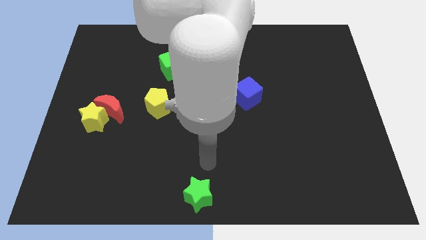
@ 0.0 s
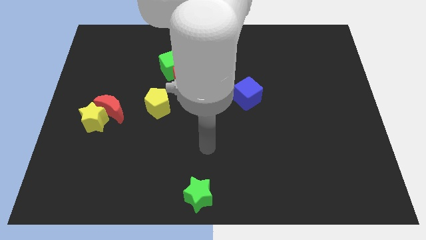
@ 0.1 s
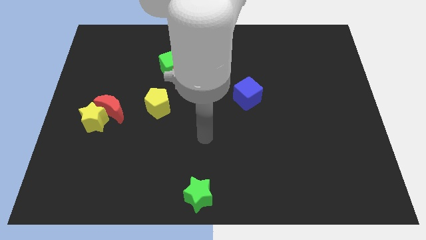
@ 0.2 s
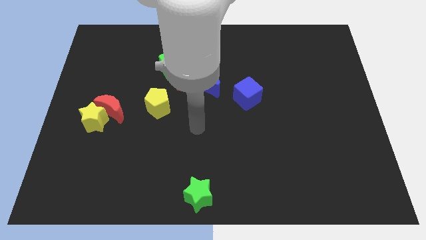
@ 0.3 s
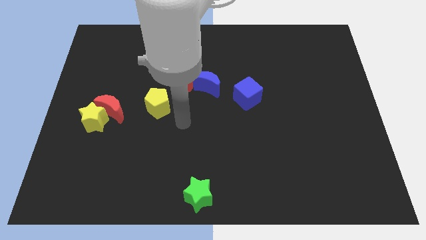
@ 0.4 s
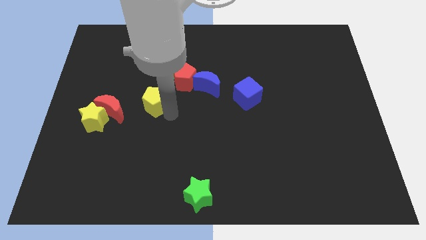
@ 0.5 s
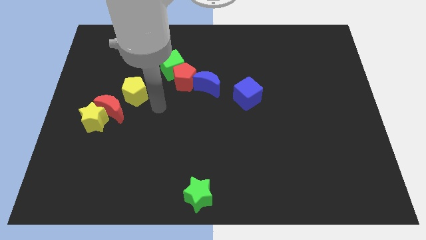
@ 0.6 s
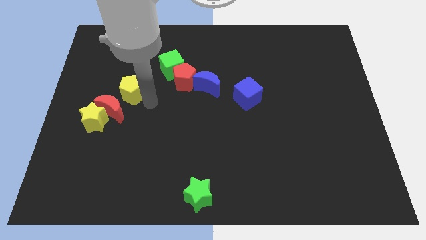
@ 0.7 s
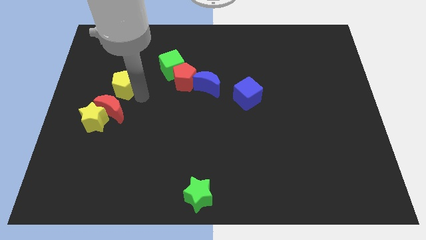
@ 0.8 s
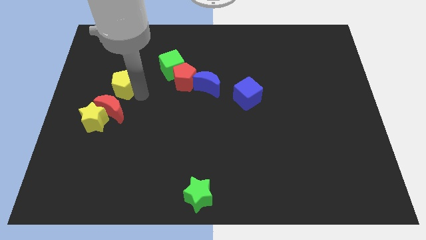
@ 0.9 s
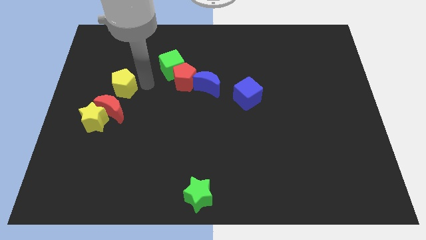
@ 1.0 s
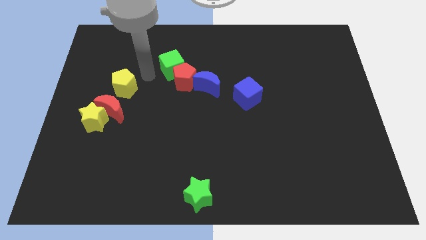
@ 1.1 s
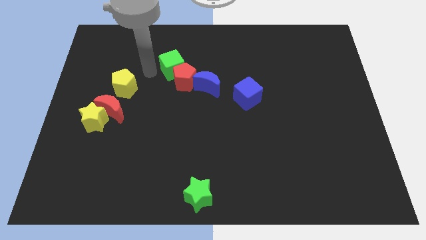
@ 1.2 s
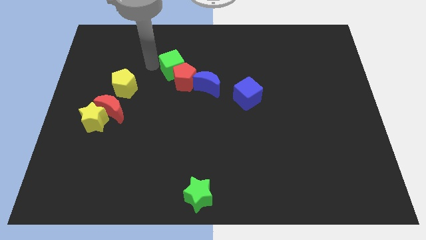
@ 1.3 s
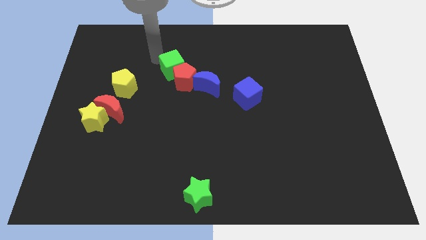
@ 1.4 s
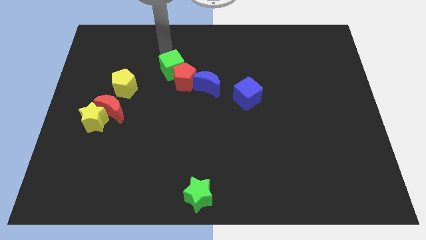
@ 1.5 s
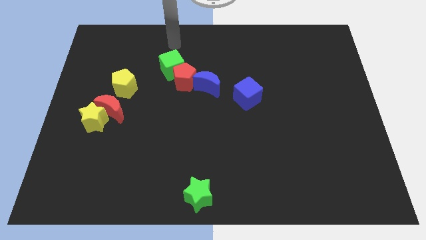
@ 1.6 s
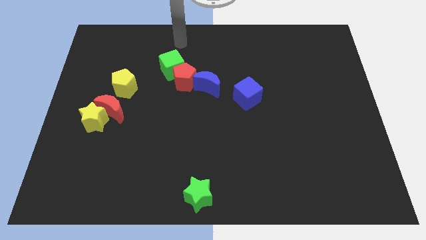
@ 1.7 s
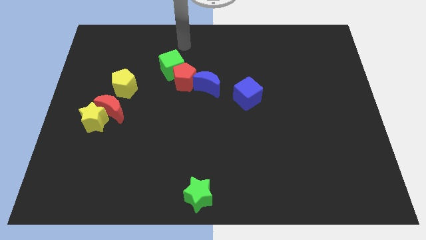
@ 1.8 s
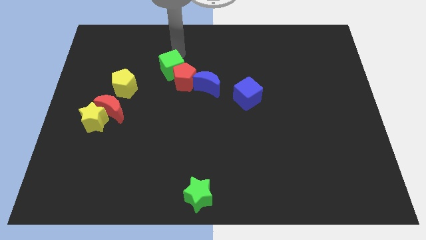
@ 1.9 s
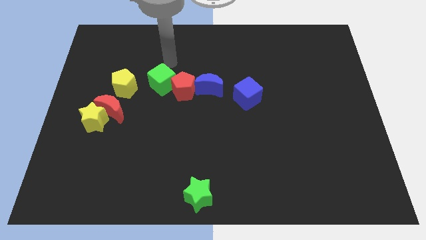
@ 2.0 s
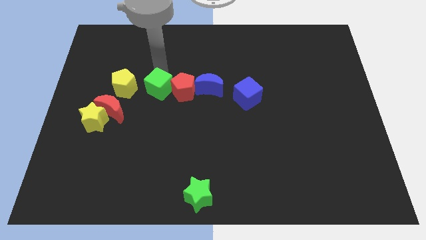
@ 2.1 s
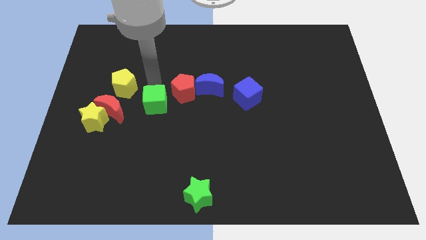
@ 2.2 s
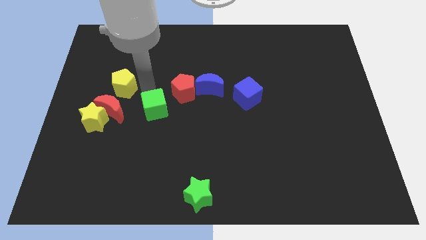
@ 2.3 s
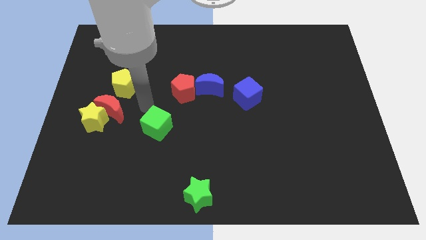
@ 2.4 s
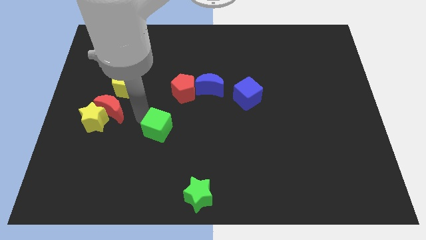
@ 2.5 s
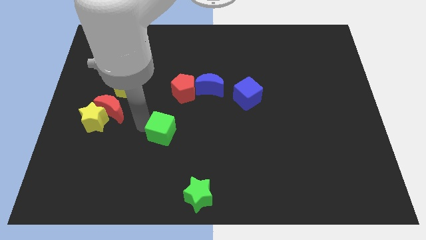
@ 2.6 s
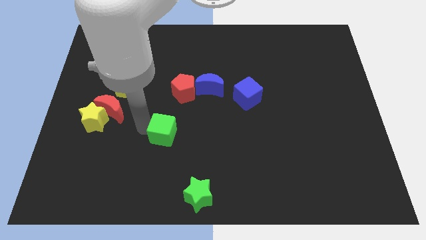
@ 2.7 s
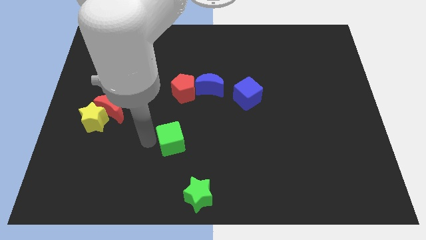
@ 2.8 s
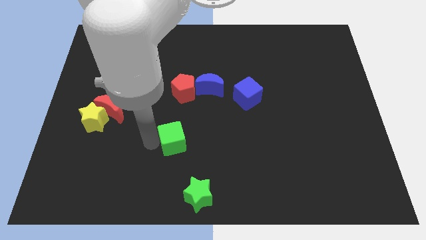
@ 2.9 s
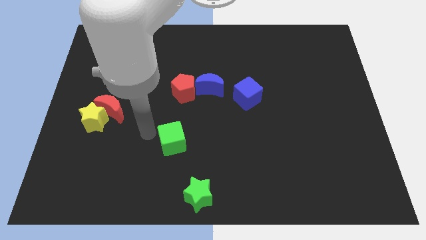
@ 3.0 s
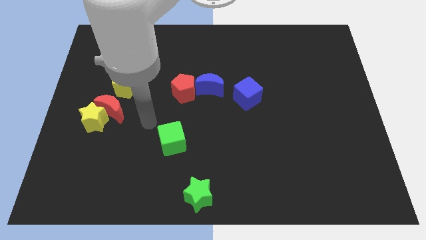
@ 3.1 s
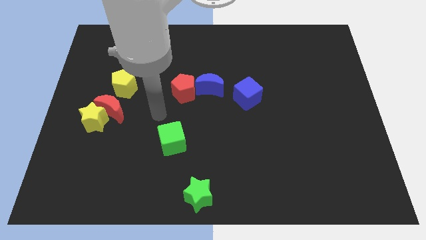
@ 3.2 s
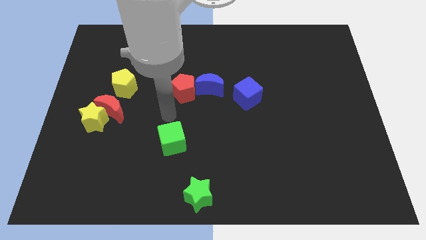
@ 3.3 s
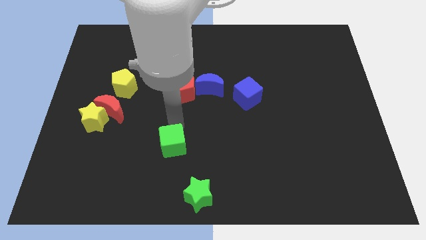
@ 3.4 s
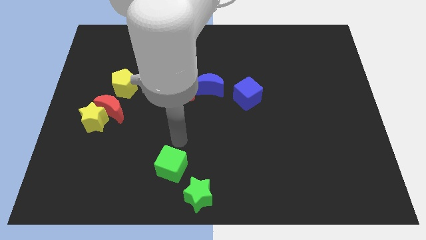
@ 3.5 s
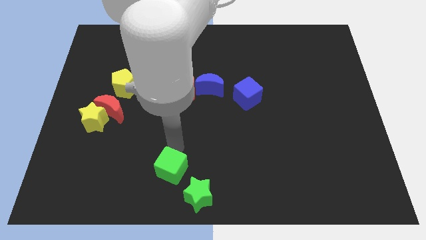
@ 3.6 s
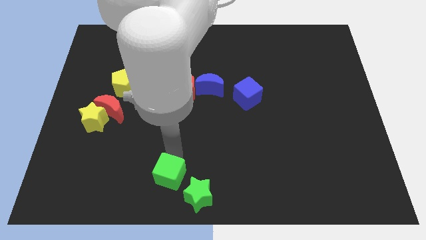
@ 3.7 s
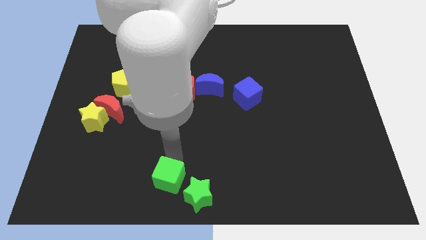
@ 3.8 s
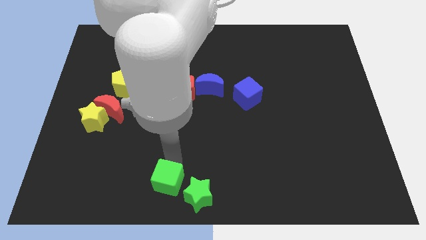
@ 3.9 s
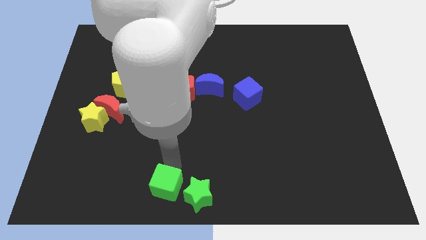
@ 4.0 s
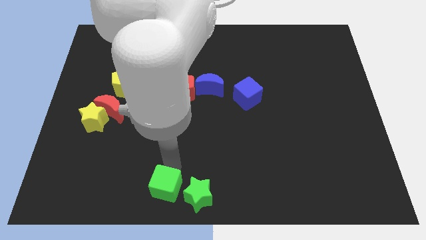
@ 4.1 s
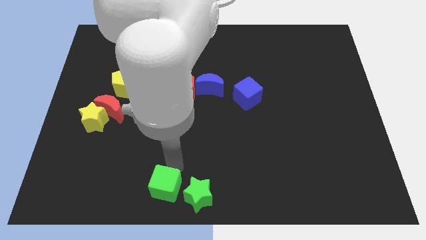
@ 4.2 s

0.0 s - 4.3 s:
move the green cube to the left of the green star

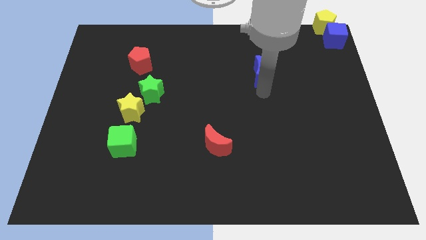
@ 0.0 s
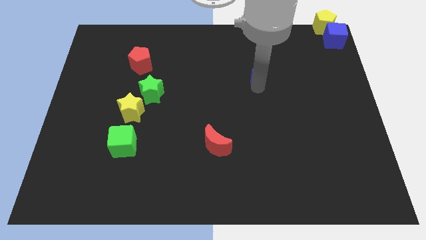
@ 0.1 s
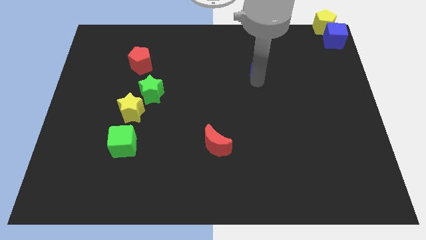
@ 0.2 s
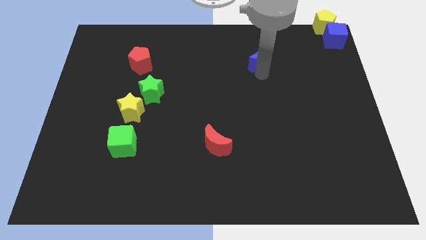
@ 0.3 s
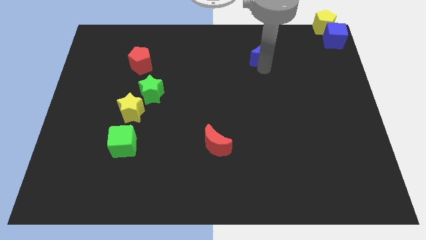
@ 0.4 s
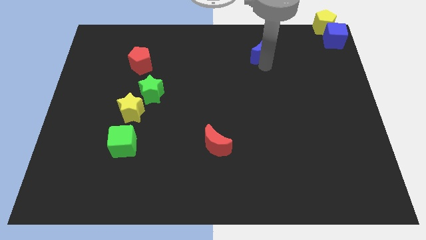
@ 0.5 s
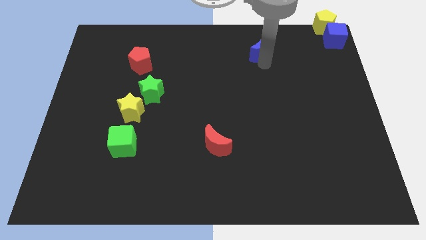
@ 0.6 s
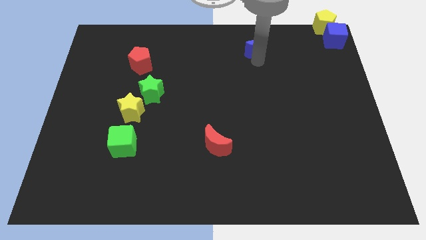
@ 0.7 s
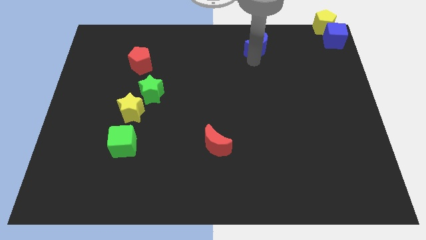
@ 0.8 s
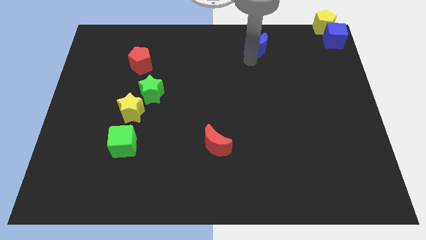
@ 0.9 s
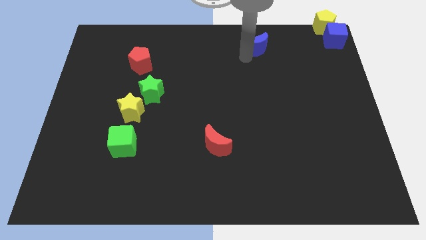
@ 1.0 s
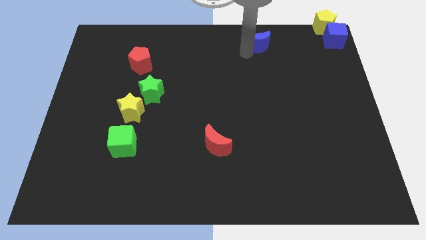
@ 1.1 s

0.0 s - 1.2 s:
move the blue crescent slightly to the top

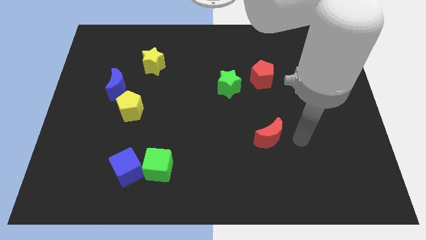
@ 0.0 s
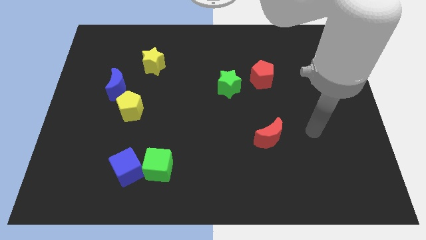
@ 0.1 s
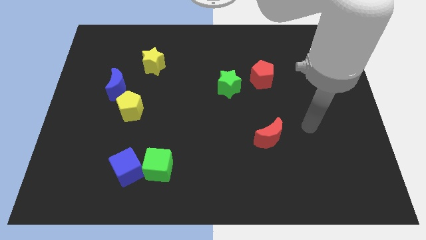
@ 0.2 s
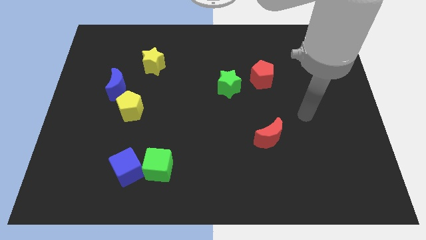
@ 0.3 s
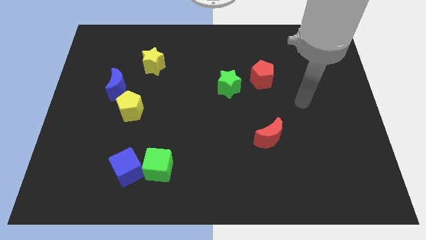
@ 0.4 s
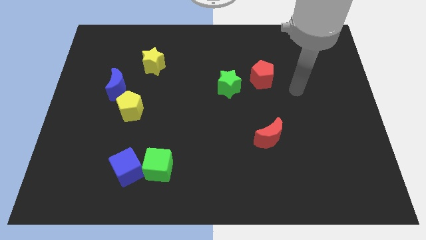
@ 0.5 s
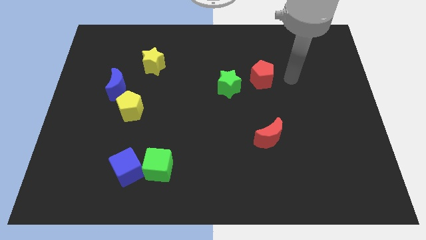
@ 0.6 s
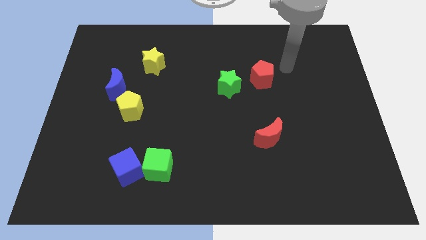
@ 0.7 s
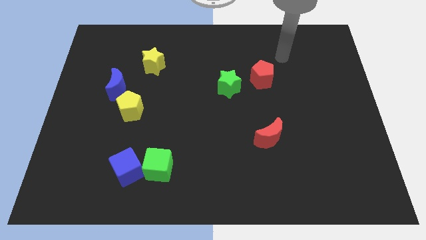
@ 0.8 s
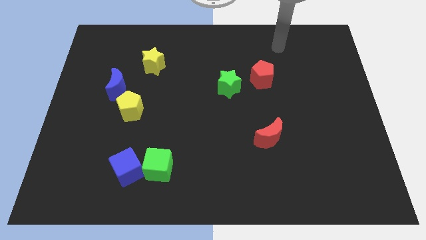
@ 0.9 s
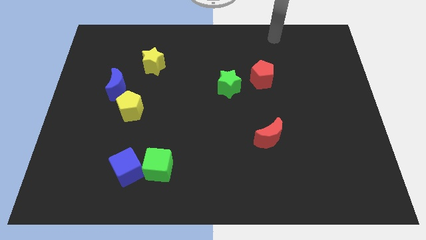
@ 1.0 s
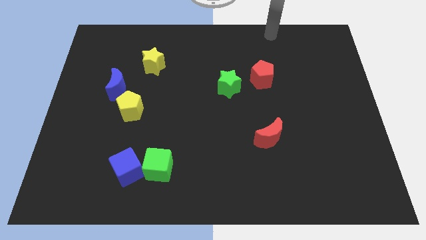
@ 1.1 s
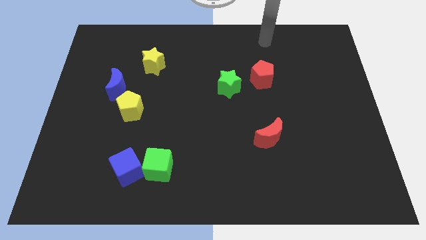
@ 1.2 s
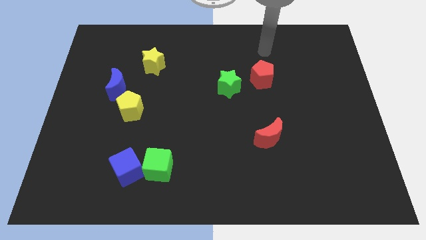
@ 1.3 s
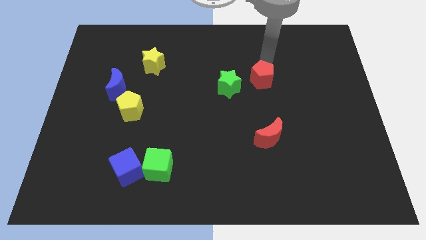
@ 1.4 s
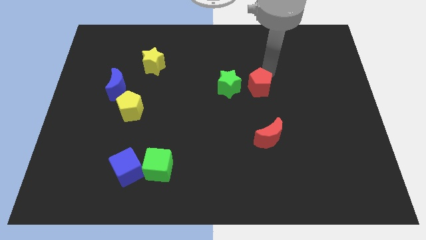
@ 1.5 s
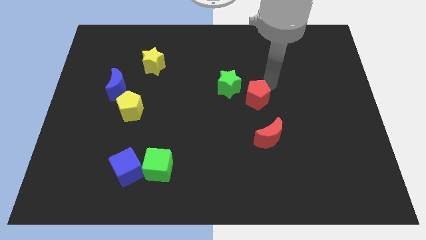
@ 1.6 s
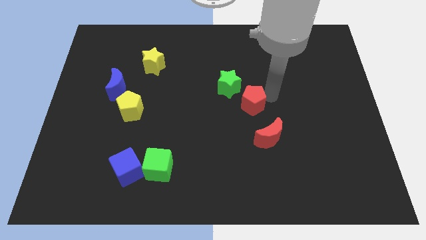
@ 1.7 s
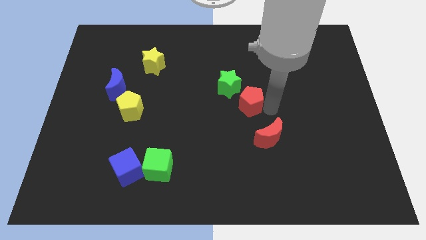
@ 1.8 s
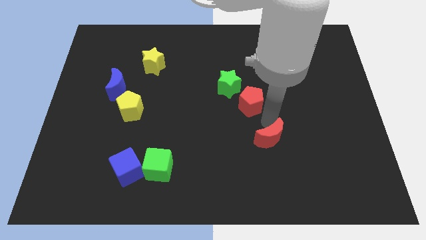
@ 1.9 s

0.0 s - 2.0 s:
slide the red pentagon diagonally bottom right to the green star

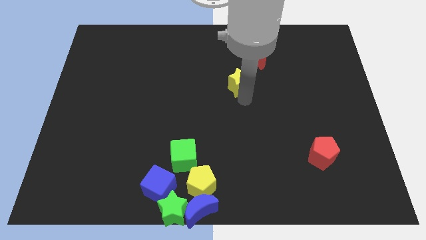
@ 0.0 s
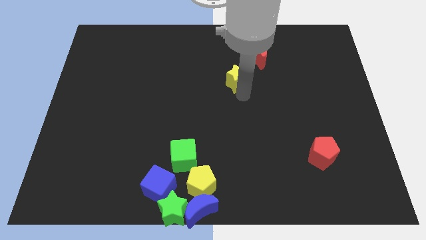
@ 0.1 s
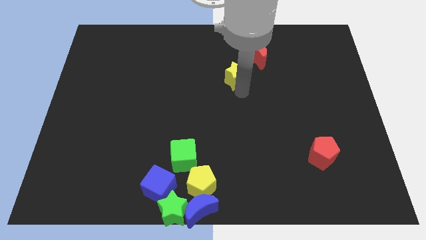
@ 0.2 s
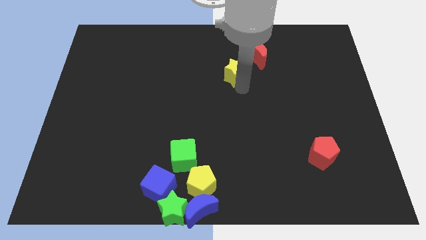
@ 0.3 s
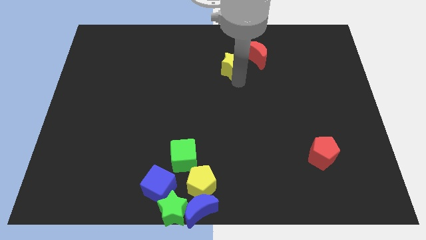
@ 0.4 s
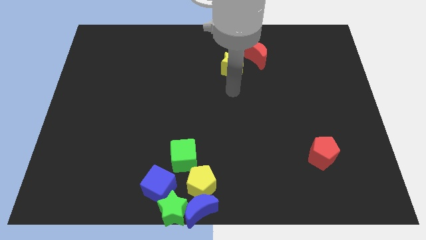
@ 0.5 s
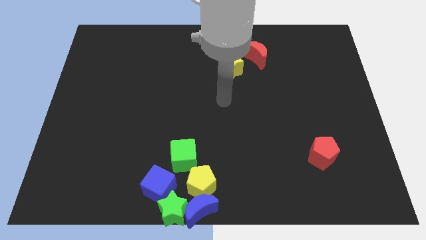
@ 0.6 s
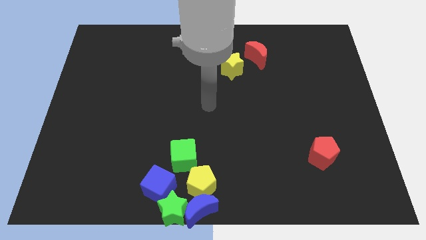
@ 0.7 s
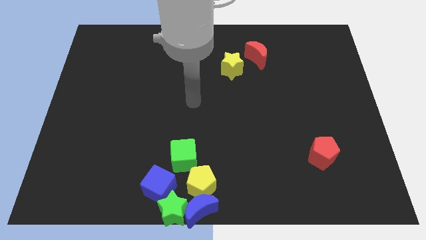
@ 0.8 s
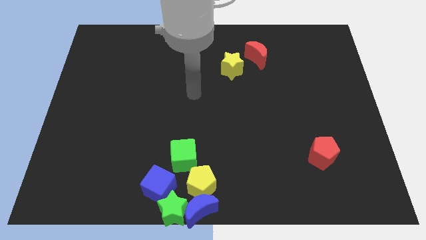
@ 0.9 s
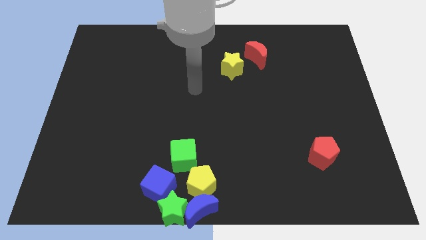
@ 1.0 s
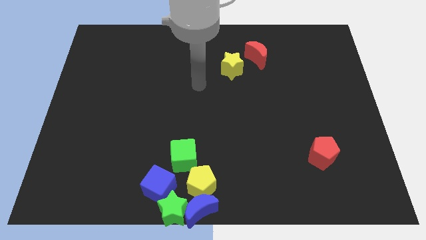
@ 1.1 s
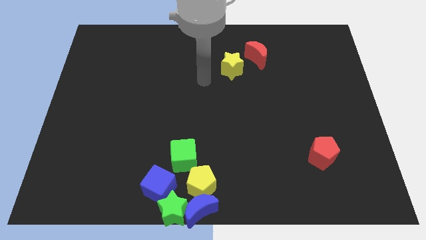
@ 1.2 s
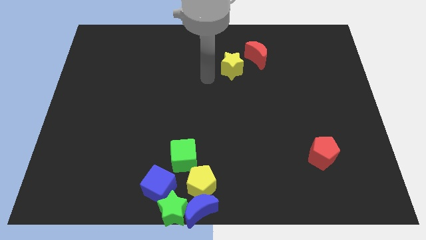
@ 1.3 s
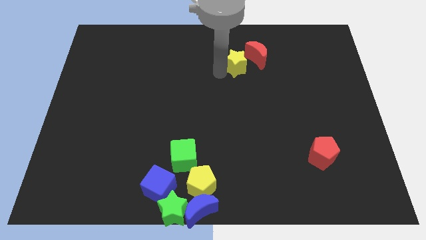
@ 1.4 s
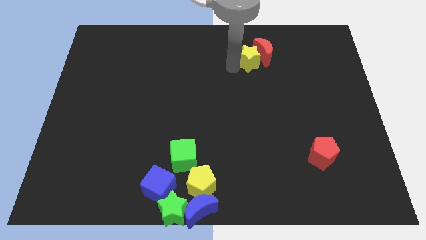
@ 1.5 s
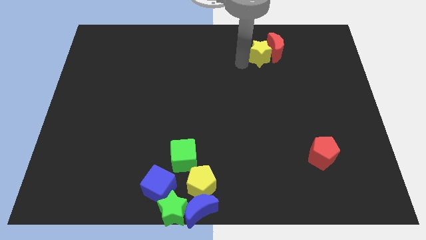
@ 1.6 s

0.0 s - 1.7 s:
move the yellow star into the red crescent
